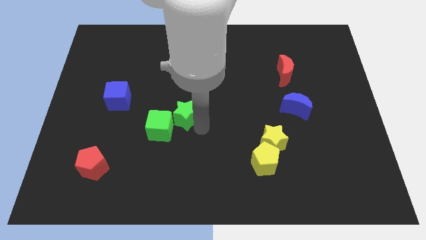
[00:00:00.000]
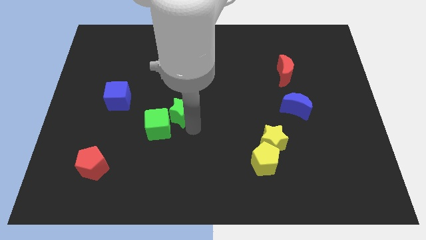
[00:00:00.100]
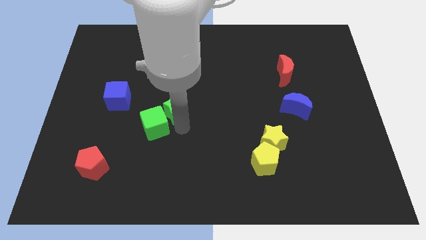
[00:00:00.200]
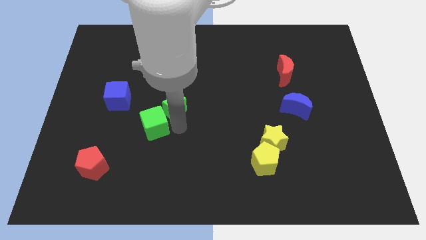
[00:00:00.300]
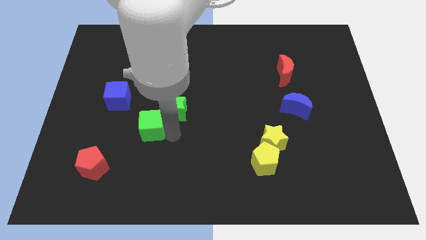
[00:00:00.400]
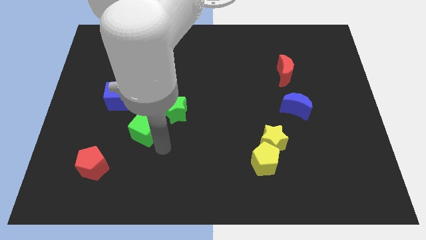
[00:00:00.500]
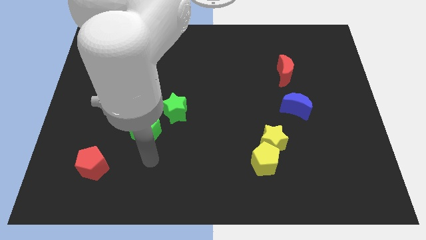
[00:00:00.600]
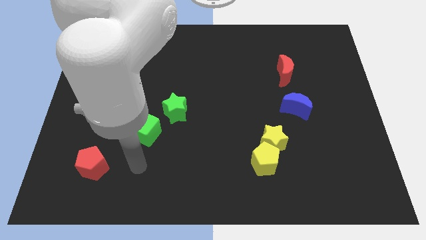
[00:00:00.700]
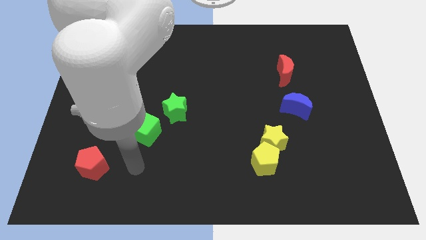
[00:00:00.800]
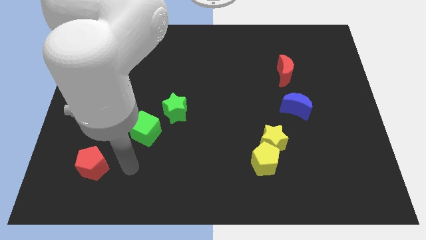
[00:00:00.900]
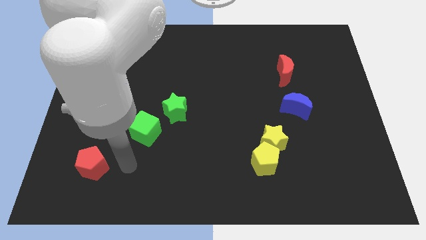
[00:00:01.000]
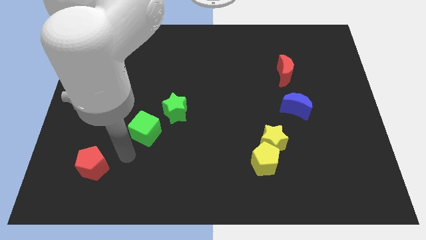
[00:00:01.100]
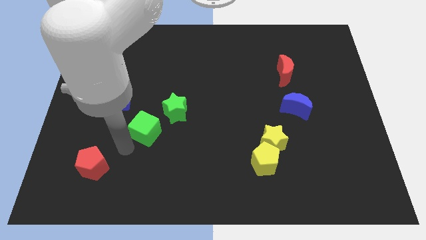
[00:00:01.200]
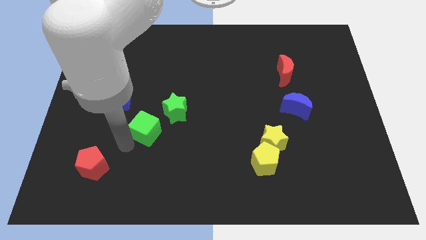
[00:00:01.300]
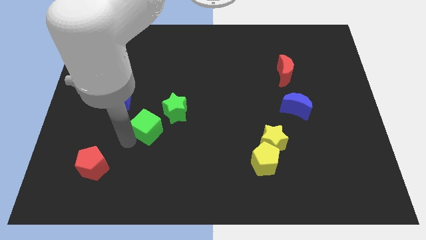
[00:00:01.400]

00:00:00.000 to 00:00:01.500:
touch the bottom side of the green cube

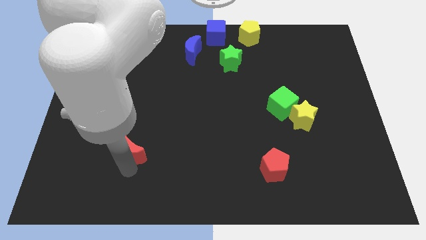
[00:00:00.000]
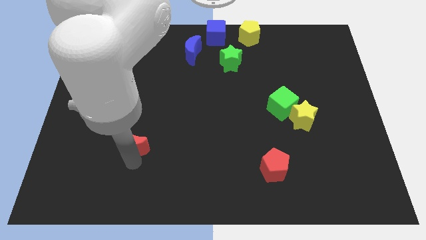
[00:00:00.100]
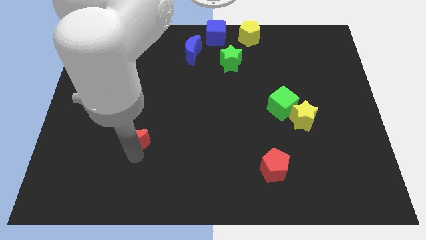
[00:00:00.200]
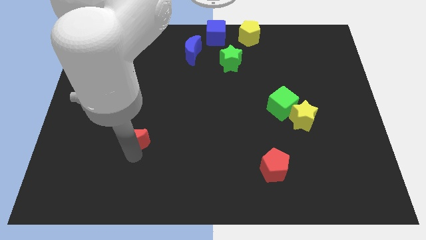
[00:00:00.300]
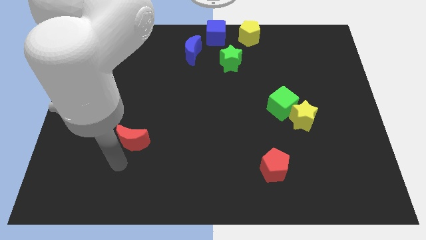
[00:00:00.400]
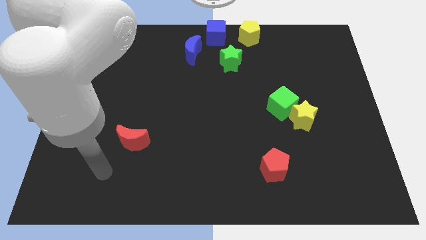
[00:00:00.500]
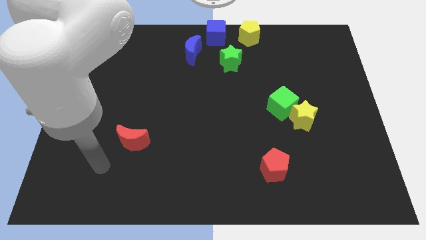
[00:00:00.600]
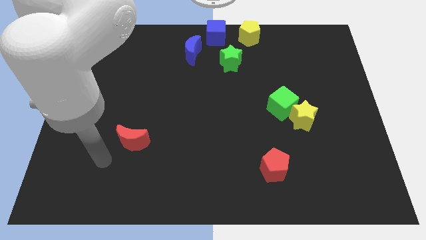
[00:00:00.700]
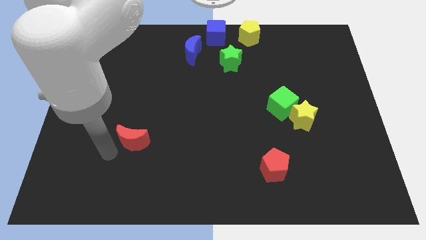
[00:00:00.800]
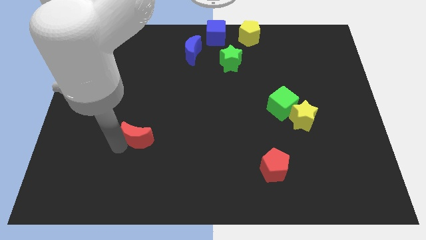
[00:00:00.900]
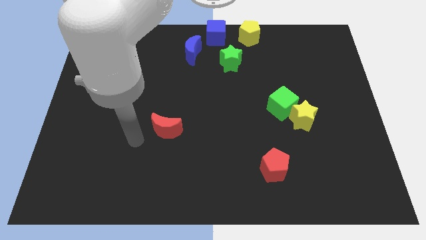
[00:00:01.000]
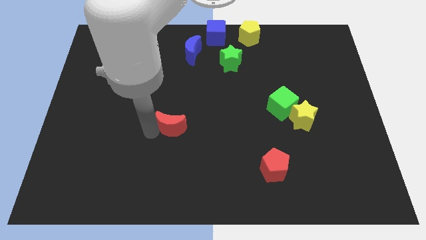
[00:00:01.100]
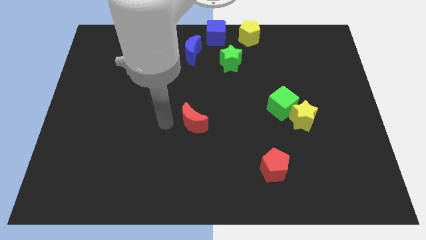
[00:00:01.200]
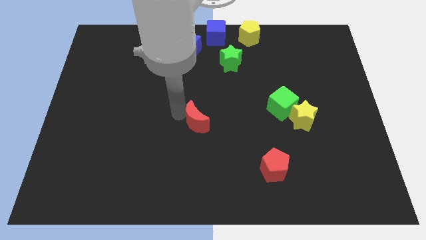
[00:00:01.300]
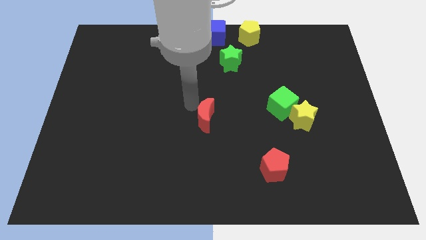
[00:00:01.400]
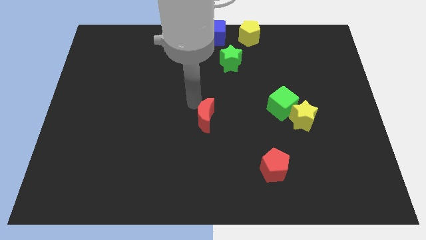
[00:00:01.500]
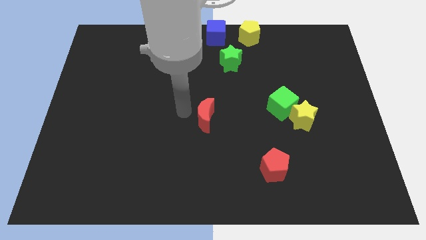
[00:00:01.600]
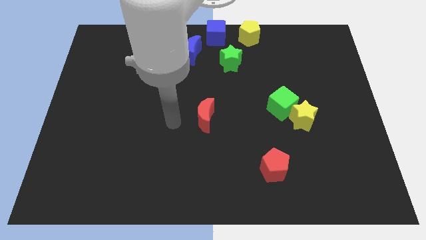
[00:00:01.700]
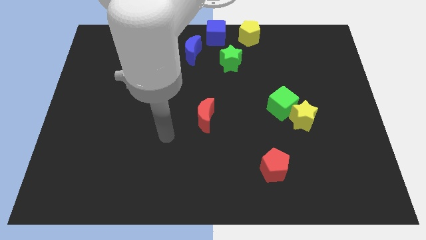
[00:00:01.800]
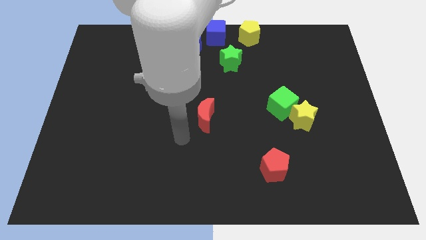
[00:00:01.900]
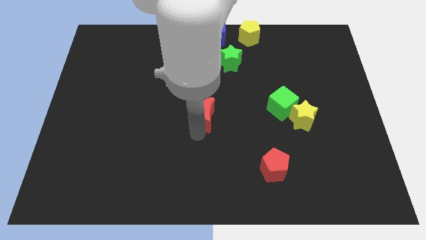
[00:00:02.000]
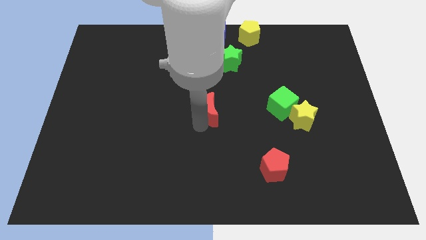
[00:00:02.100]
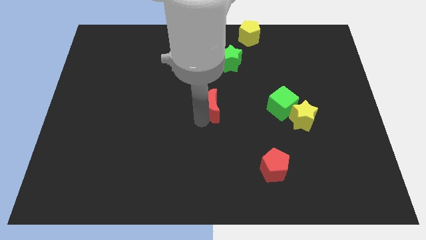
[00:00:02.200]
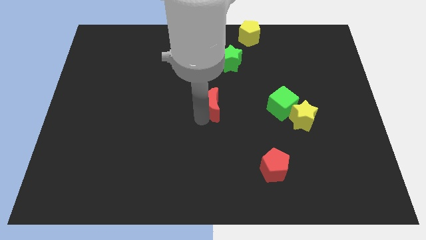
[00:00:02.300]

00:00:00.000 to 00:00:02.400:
move the red crescent to the center of the board

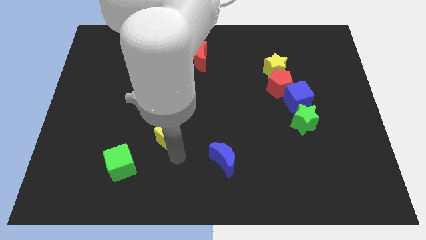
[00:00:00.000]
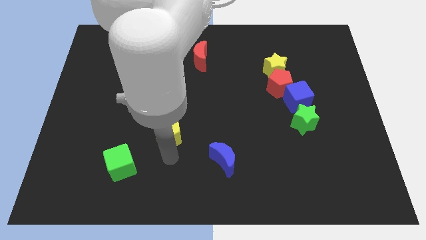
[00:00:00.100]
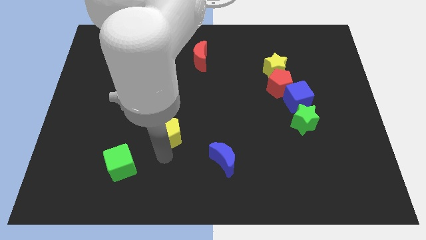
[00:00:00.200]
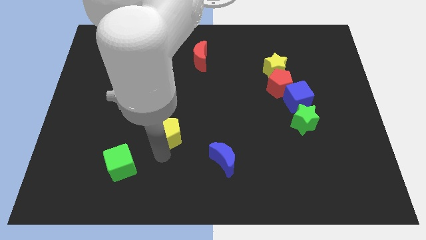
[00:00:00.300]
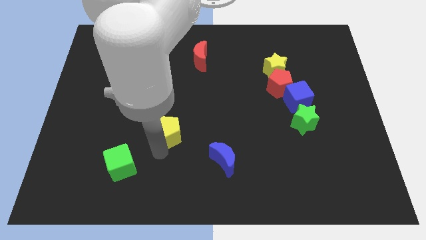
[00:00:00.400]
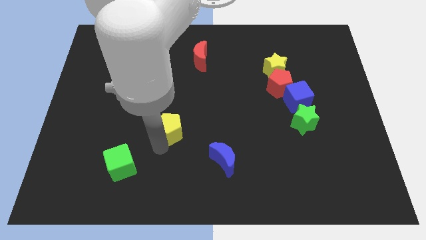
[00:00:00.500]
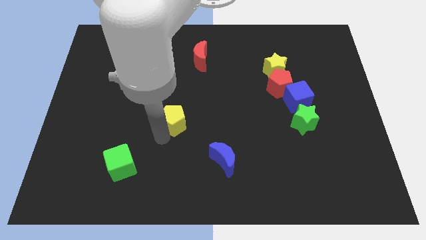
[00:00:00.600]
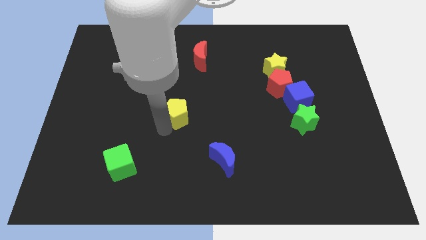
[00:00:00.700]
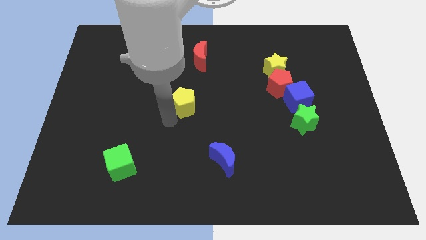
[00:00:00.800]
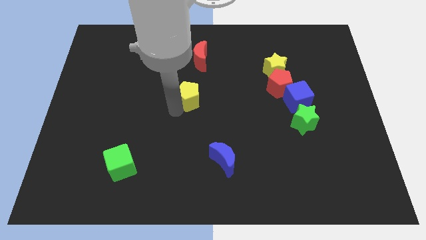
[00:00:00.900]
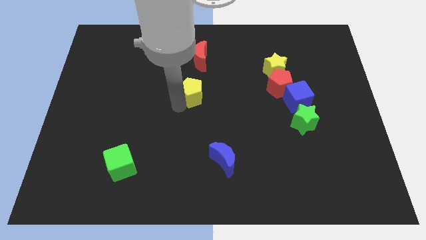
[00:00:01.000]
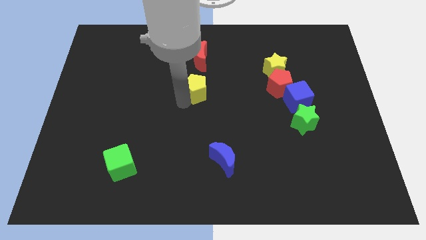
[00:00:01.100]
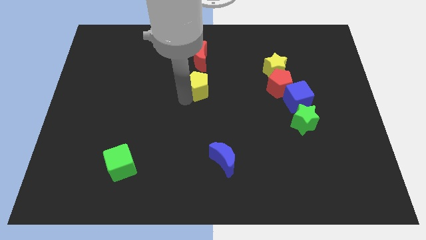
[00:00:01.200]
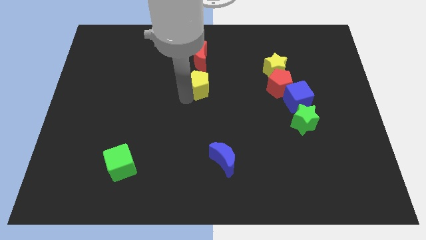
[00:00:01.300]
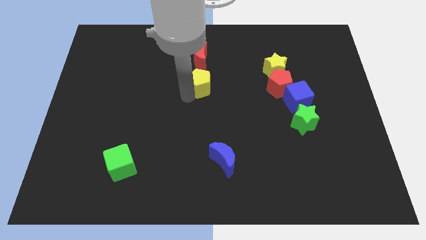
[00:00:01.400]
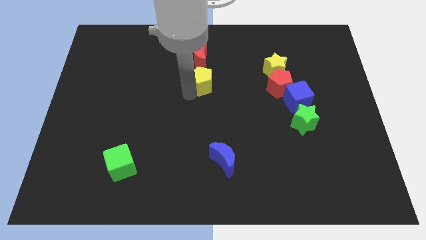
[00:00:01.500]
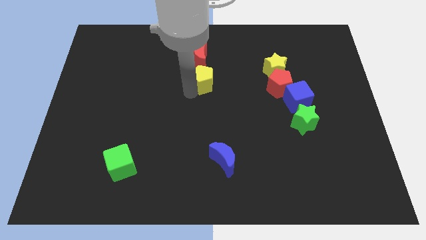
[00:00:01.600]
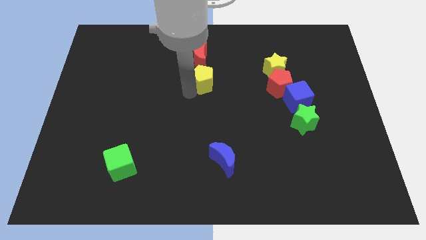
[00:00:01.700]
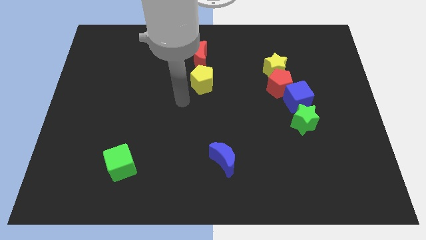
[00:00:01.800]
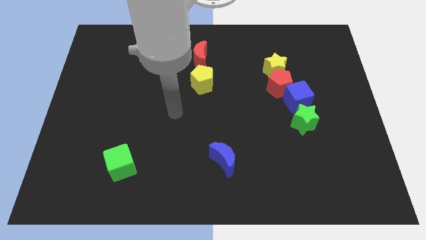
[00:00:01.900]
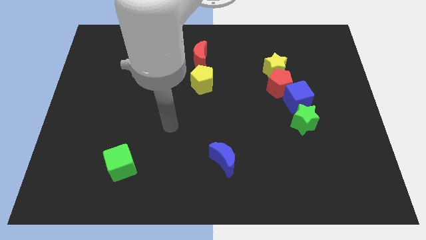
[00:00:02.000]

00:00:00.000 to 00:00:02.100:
place yellow pentagon below the red crescent

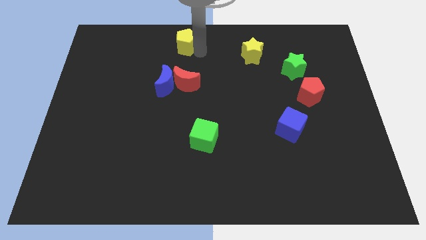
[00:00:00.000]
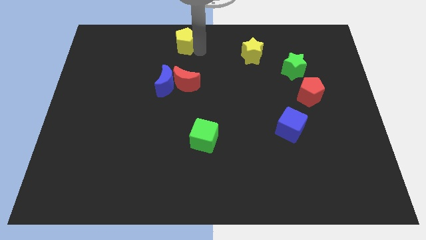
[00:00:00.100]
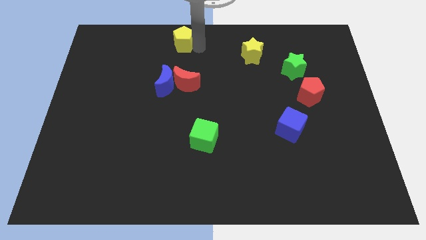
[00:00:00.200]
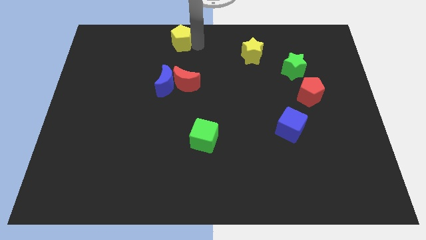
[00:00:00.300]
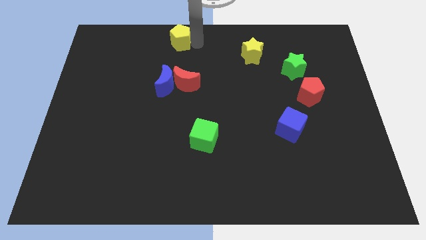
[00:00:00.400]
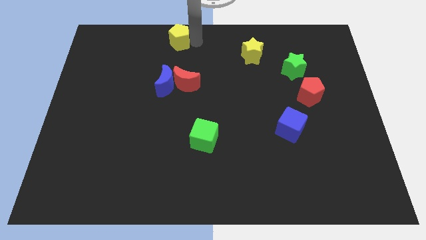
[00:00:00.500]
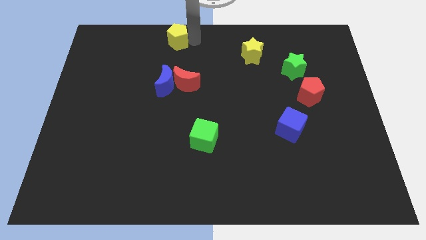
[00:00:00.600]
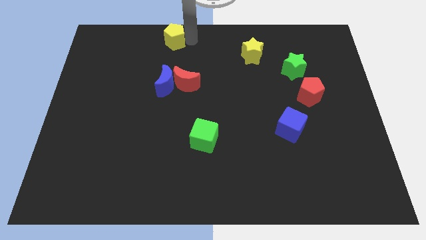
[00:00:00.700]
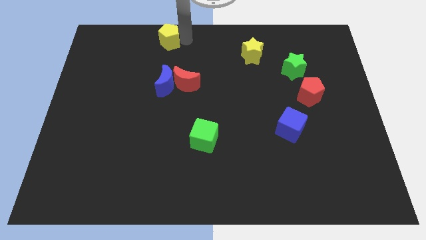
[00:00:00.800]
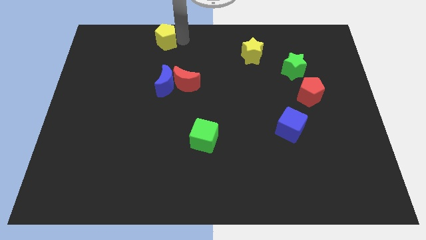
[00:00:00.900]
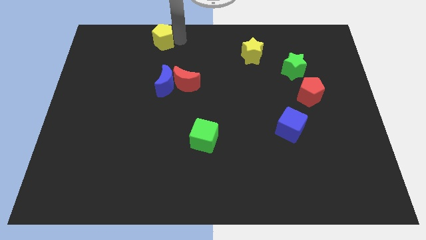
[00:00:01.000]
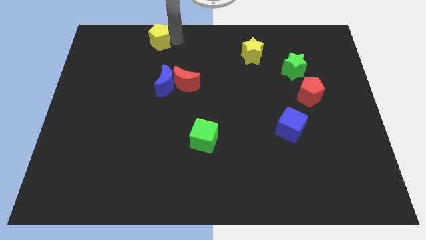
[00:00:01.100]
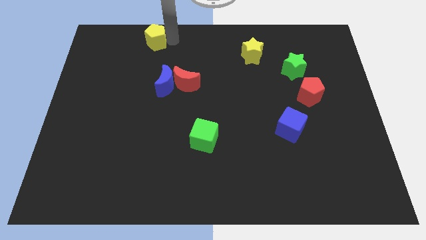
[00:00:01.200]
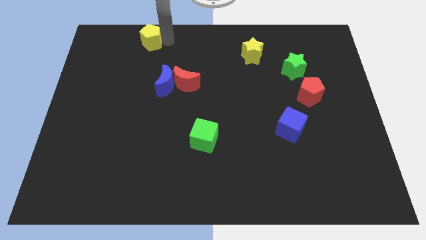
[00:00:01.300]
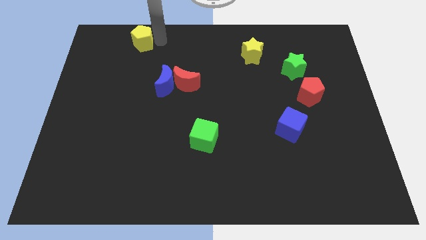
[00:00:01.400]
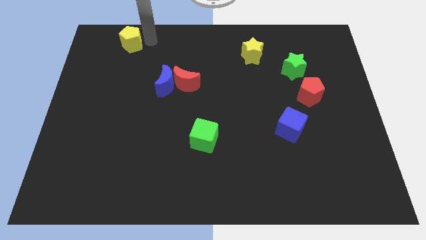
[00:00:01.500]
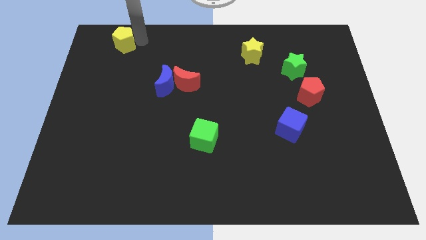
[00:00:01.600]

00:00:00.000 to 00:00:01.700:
slide the yellow pentagon diagonally top left to the blue moon

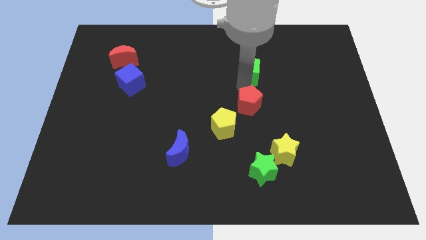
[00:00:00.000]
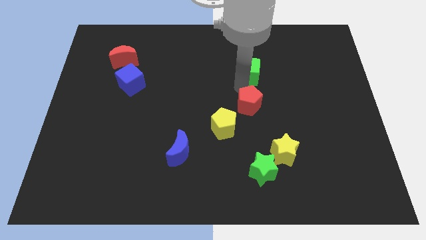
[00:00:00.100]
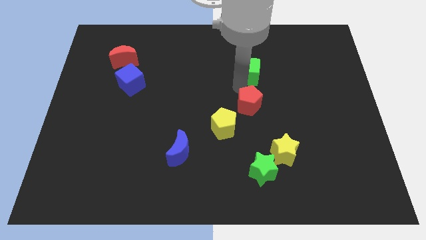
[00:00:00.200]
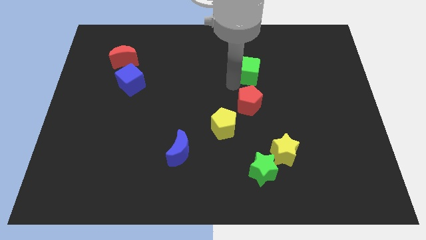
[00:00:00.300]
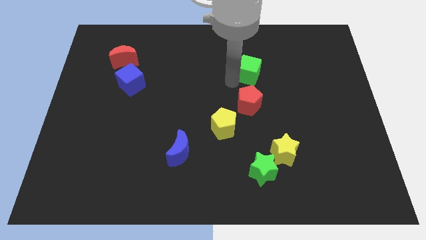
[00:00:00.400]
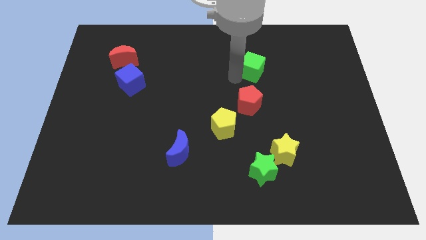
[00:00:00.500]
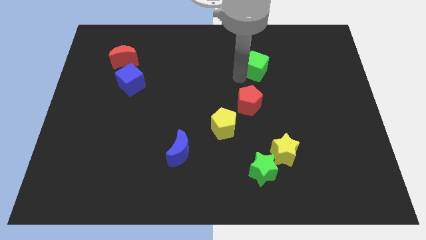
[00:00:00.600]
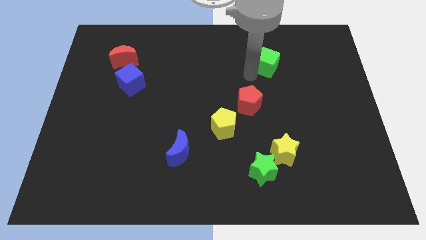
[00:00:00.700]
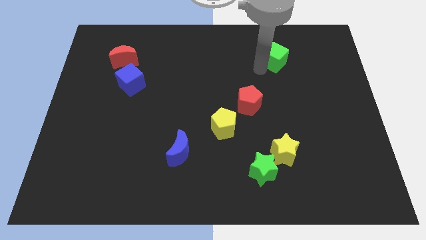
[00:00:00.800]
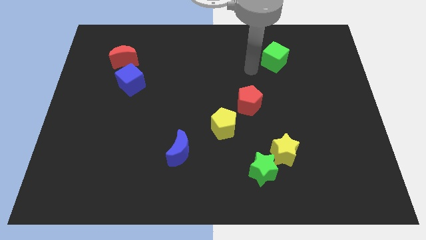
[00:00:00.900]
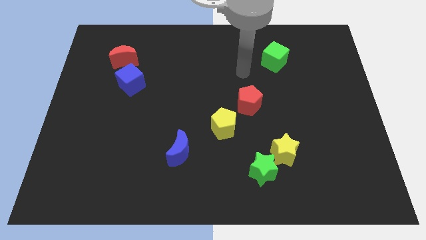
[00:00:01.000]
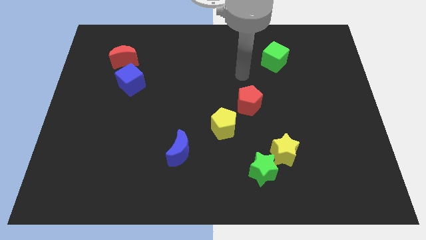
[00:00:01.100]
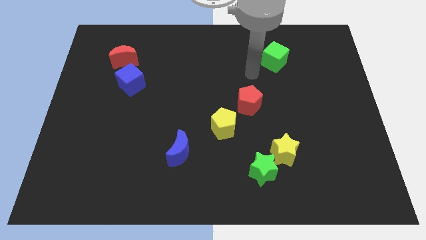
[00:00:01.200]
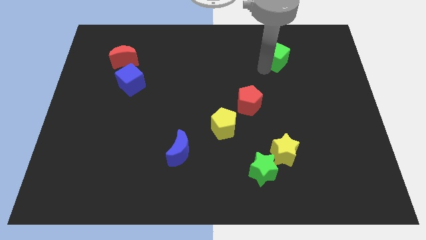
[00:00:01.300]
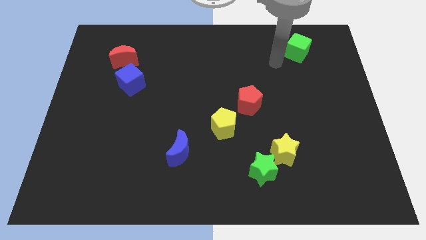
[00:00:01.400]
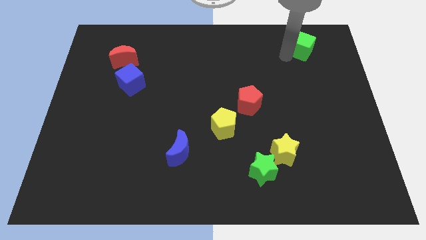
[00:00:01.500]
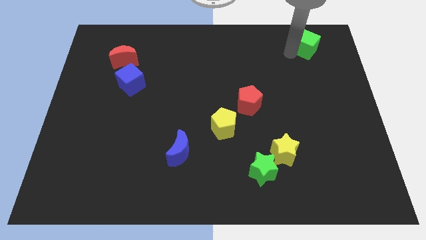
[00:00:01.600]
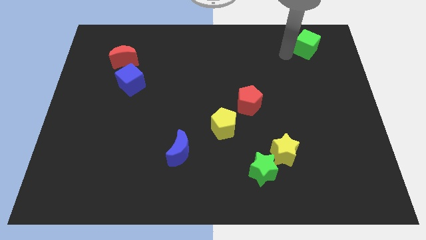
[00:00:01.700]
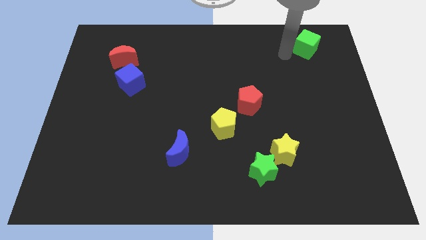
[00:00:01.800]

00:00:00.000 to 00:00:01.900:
move the green cube towards the top right side
